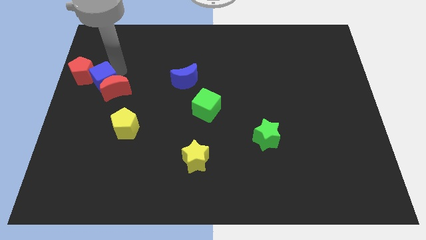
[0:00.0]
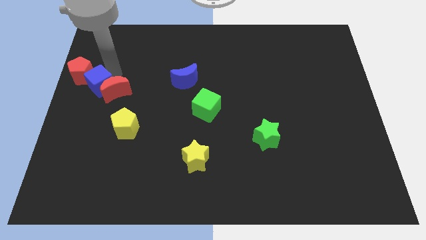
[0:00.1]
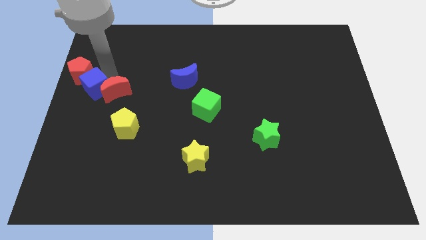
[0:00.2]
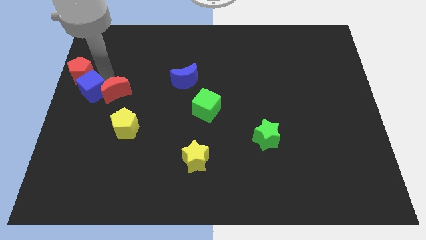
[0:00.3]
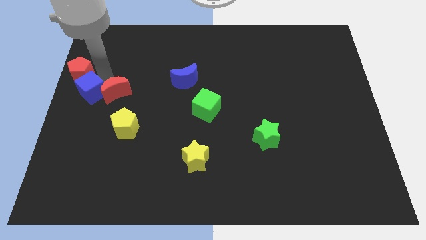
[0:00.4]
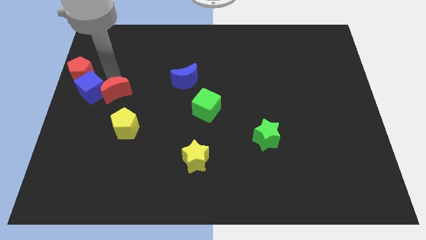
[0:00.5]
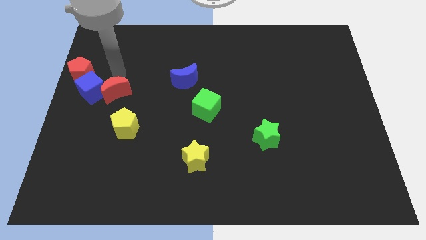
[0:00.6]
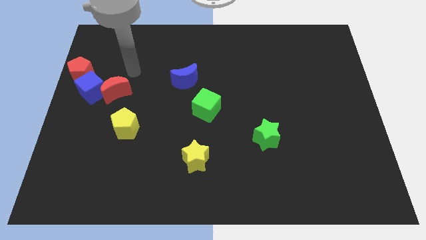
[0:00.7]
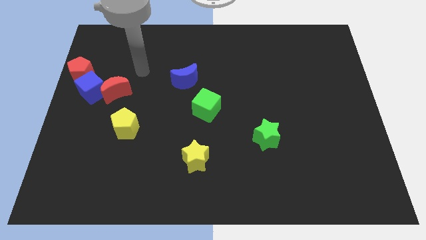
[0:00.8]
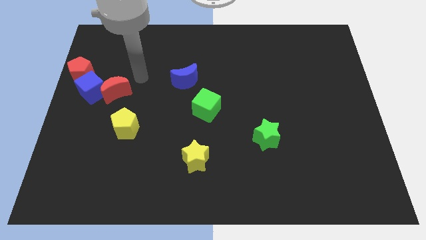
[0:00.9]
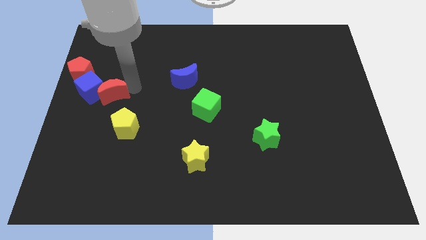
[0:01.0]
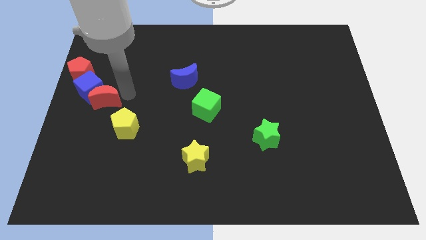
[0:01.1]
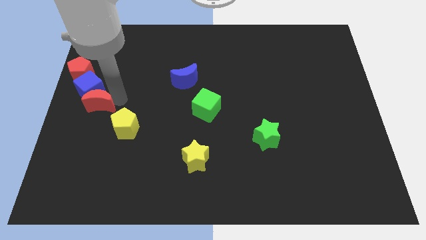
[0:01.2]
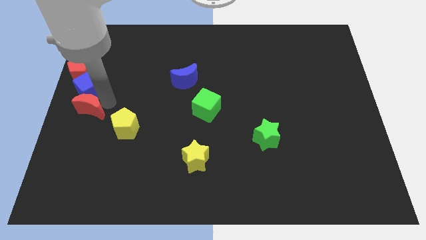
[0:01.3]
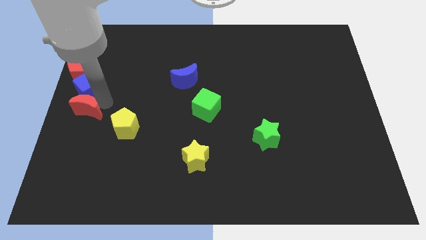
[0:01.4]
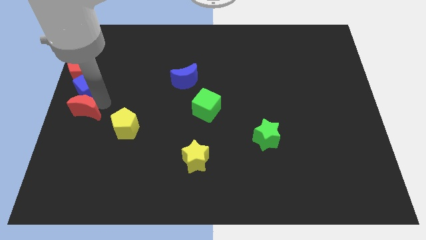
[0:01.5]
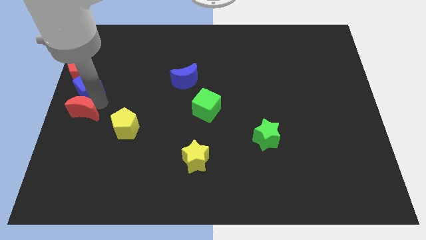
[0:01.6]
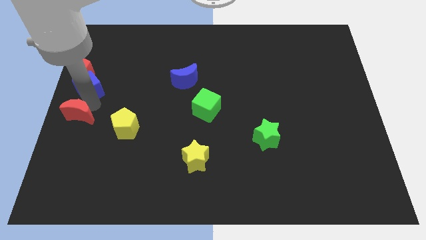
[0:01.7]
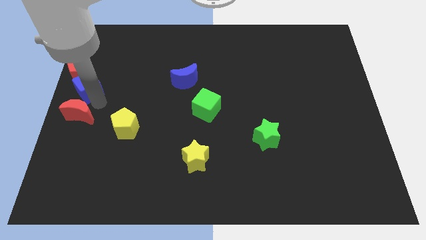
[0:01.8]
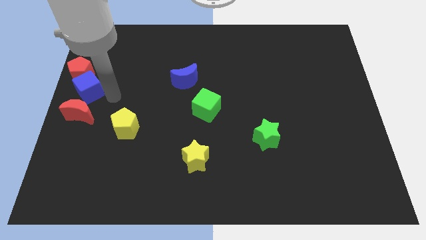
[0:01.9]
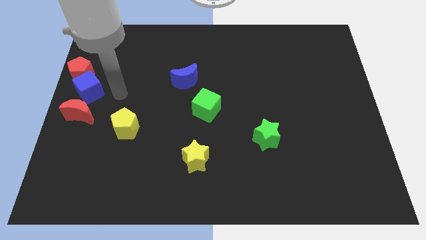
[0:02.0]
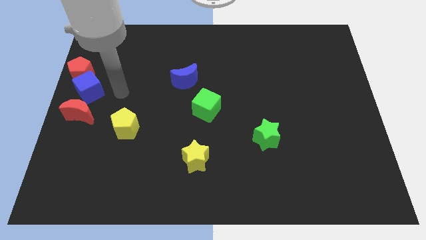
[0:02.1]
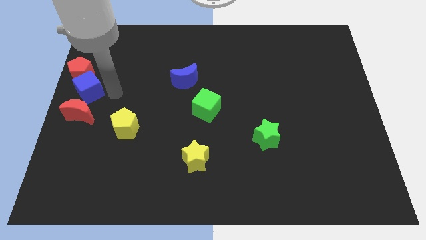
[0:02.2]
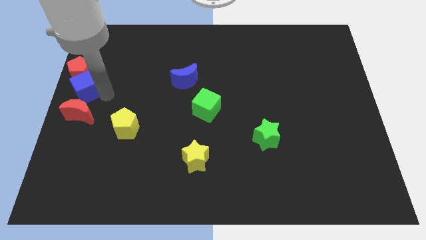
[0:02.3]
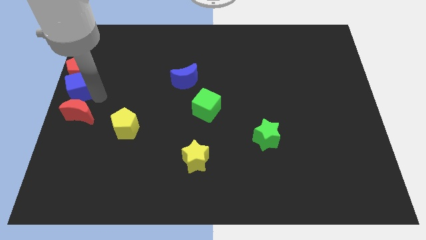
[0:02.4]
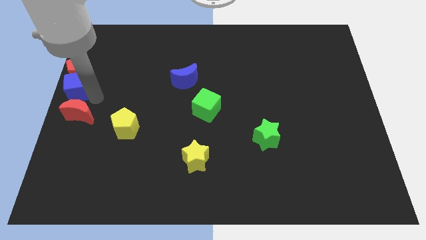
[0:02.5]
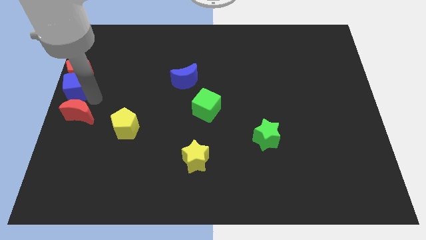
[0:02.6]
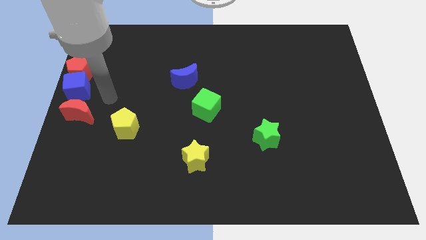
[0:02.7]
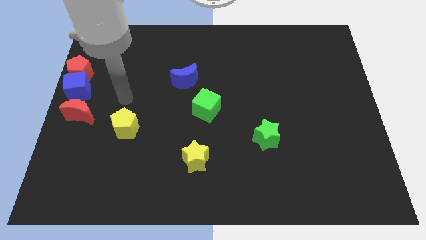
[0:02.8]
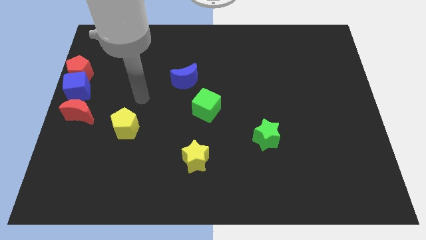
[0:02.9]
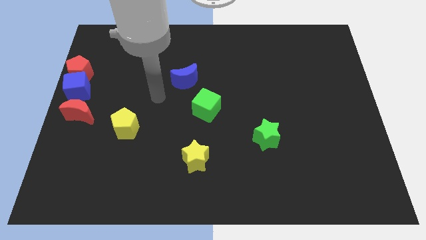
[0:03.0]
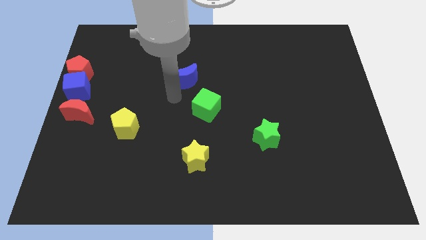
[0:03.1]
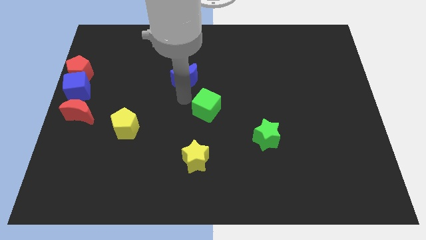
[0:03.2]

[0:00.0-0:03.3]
move the red moon and blue cube at the center left of the board

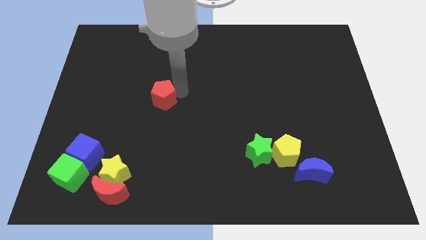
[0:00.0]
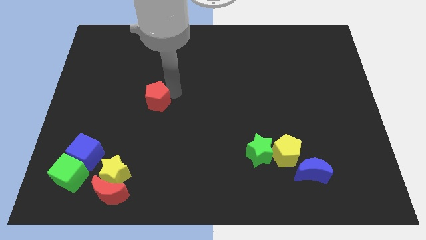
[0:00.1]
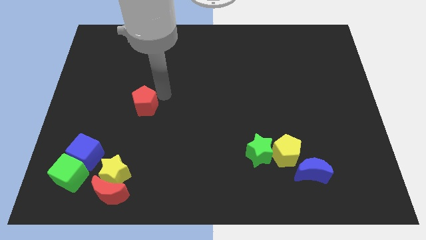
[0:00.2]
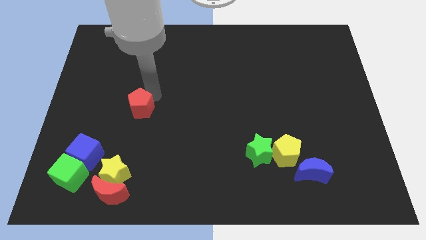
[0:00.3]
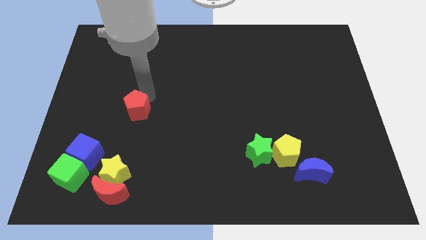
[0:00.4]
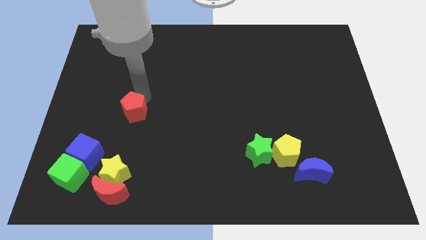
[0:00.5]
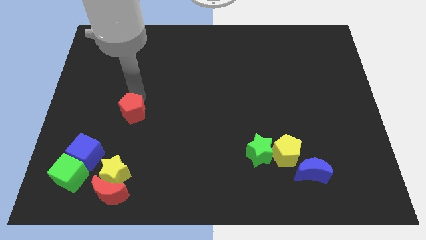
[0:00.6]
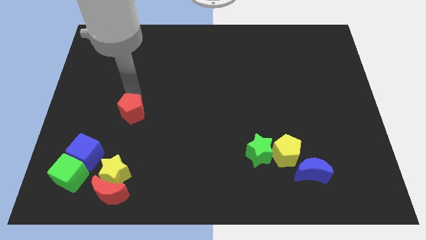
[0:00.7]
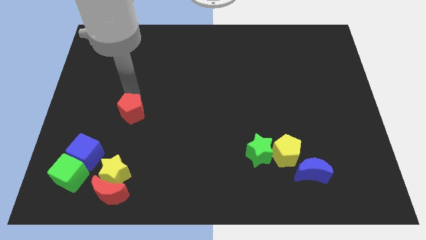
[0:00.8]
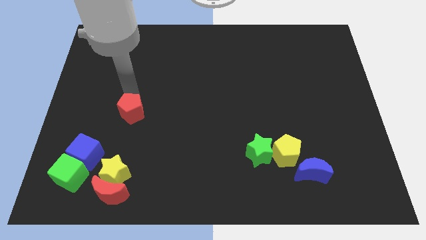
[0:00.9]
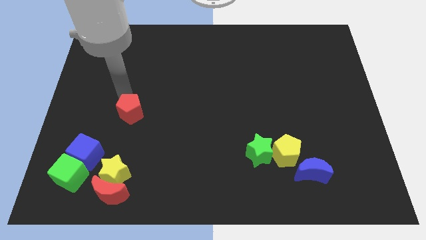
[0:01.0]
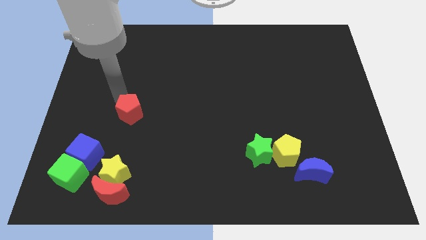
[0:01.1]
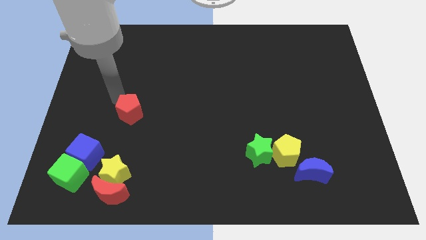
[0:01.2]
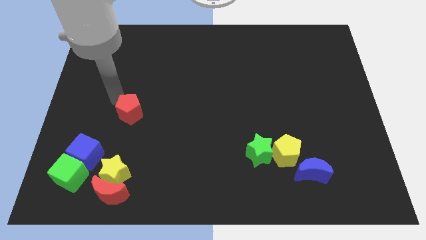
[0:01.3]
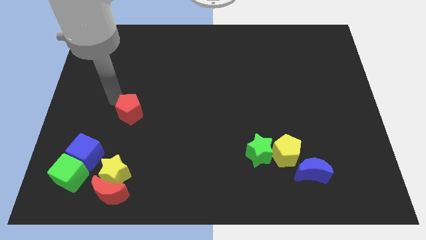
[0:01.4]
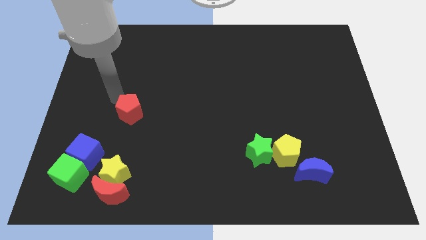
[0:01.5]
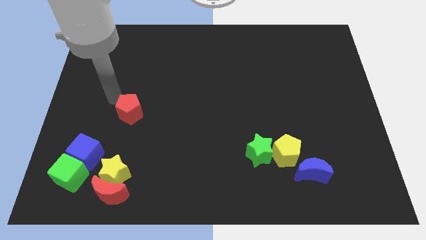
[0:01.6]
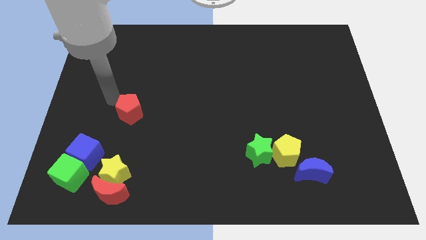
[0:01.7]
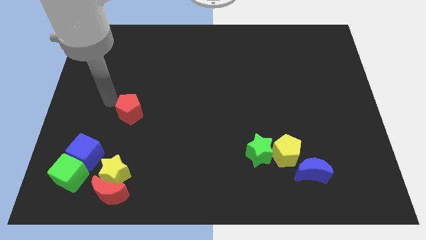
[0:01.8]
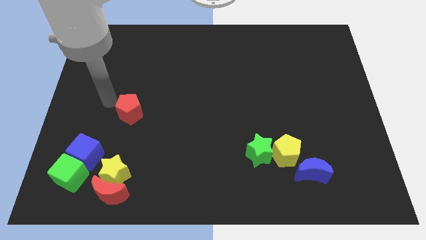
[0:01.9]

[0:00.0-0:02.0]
drag the red pentagon towards the blue cube

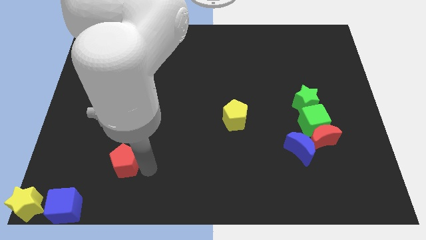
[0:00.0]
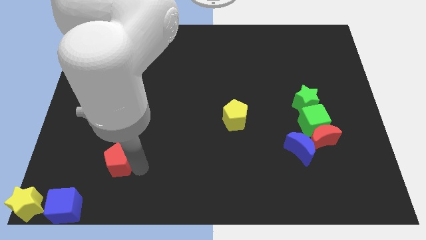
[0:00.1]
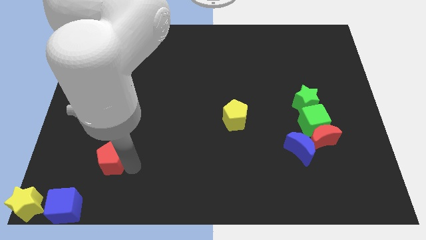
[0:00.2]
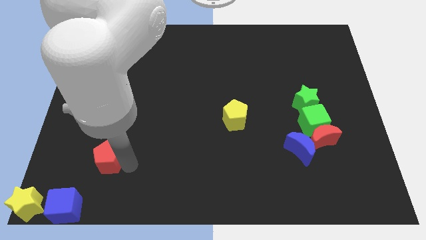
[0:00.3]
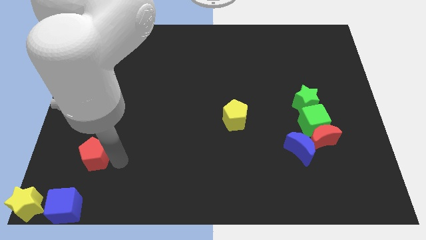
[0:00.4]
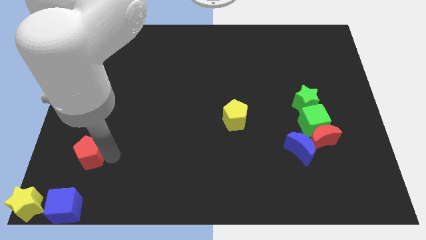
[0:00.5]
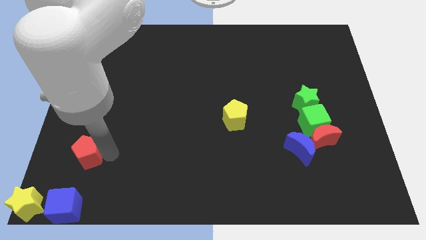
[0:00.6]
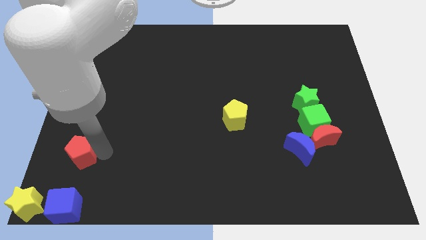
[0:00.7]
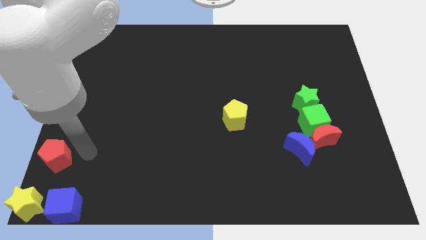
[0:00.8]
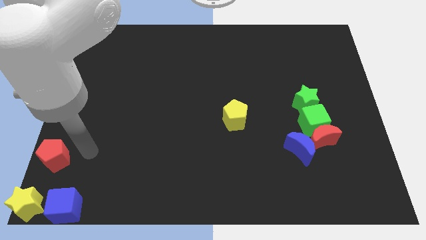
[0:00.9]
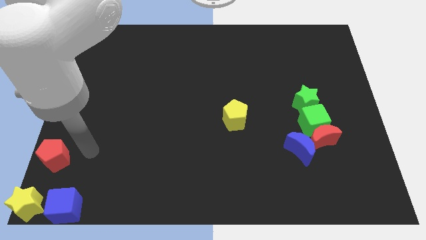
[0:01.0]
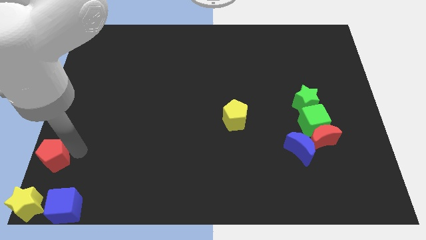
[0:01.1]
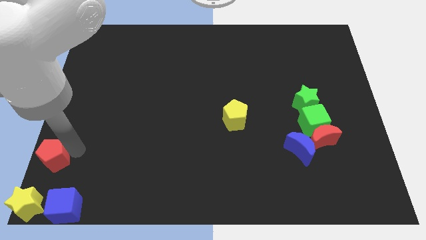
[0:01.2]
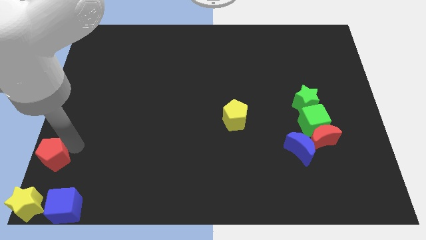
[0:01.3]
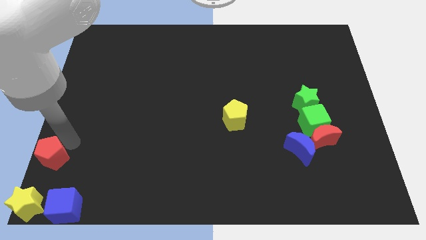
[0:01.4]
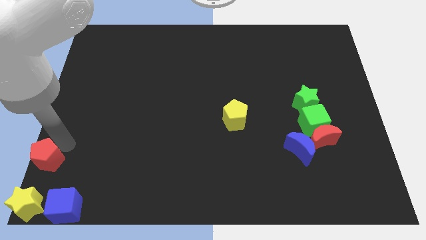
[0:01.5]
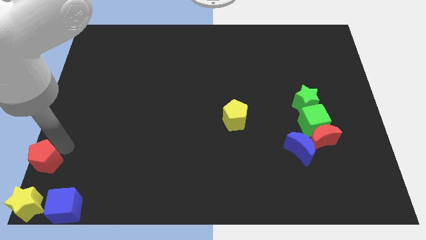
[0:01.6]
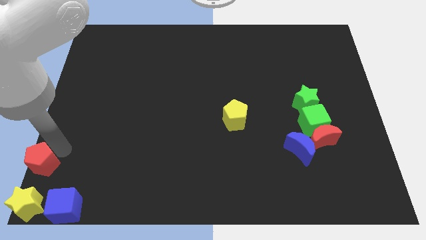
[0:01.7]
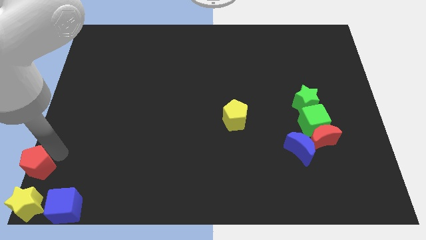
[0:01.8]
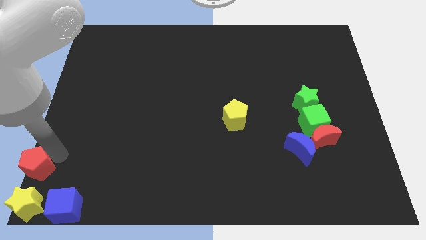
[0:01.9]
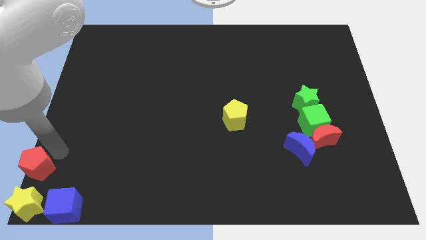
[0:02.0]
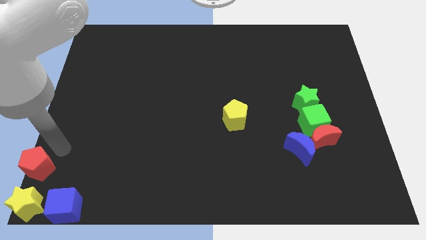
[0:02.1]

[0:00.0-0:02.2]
push the red pentagon to the top of the yellow star

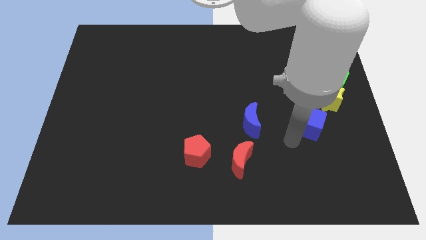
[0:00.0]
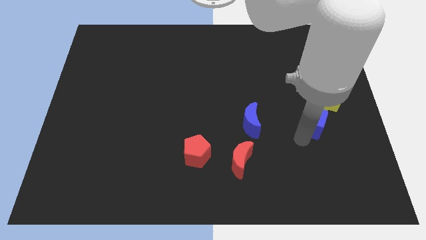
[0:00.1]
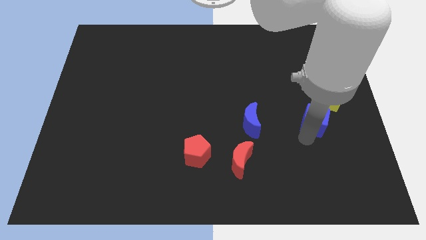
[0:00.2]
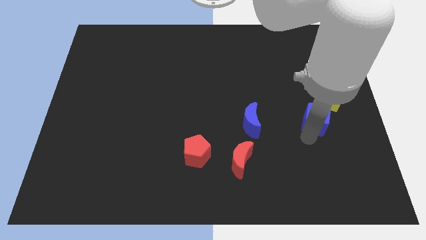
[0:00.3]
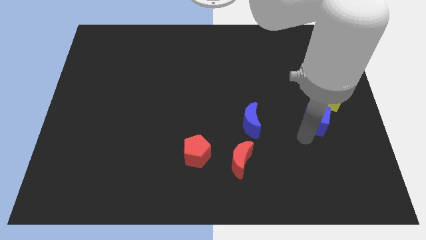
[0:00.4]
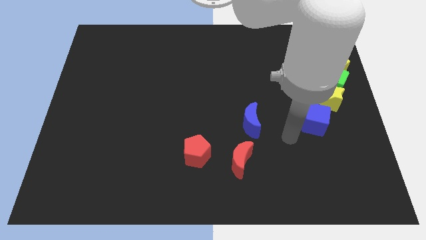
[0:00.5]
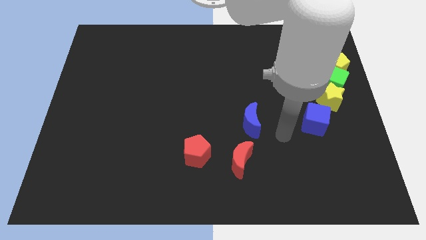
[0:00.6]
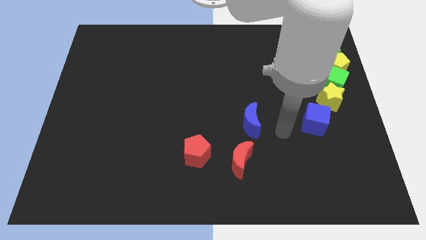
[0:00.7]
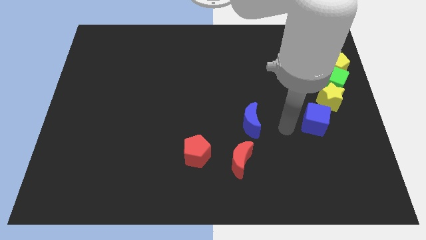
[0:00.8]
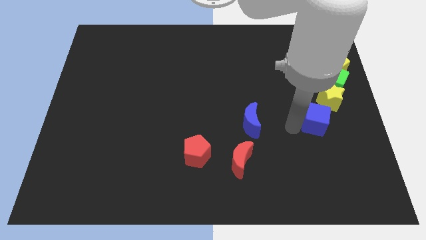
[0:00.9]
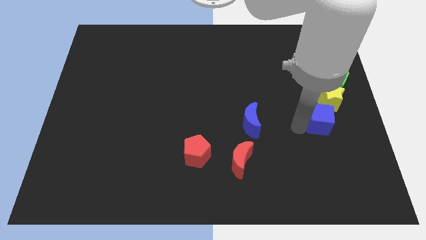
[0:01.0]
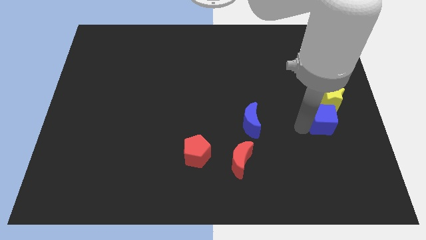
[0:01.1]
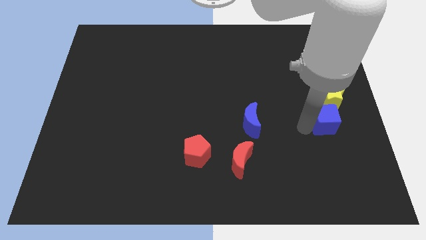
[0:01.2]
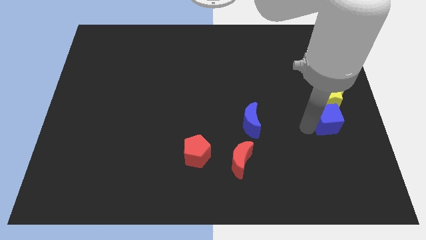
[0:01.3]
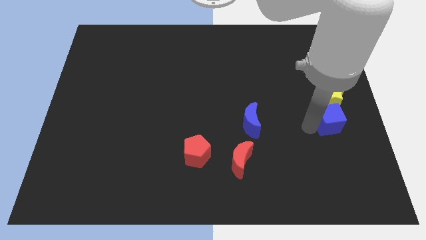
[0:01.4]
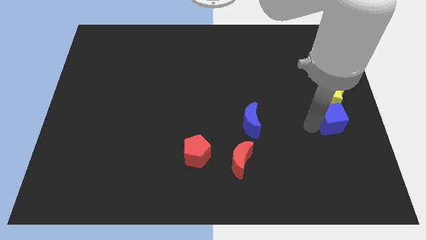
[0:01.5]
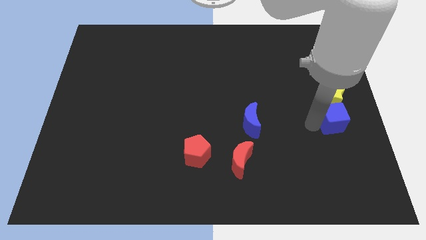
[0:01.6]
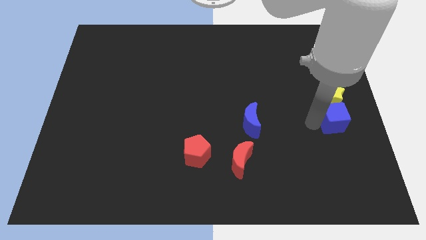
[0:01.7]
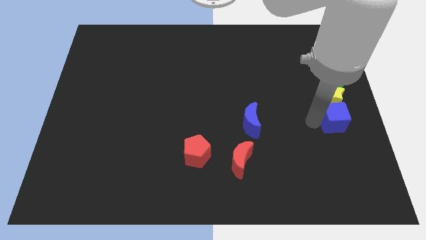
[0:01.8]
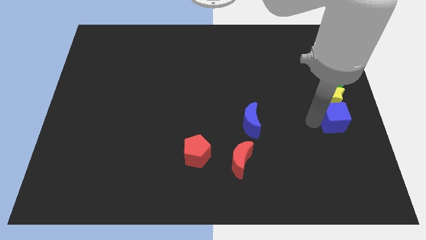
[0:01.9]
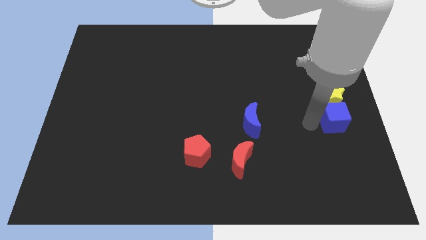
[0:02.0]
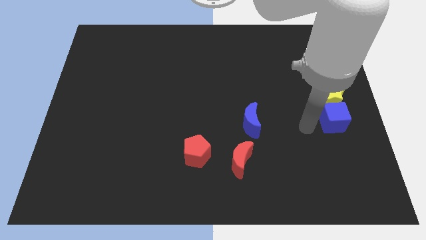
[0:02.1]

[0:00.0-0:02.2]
place the blue cube to the bottom of the yellow star
